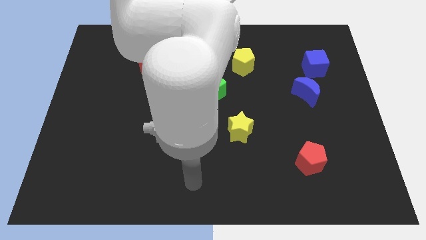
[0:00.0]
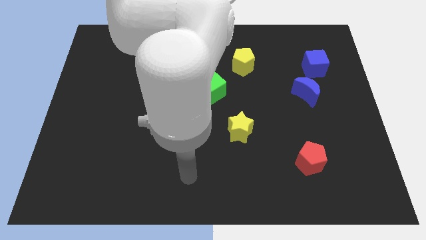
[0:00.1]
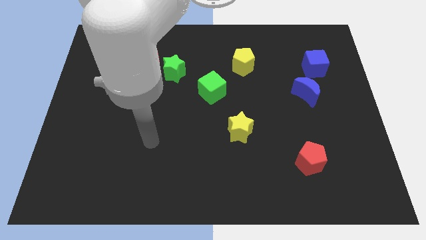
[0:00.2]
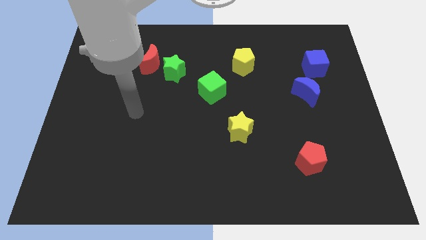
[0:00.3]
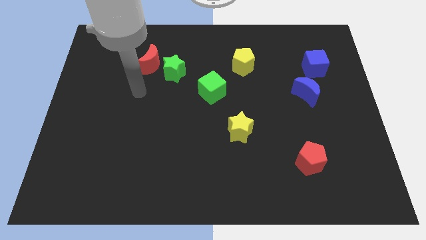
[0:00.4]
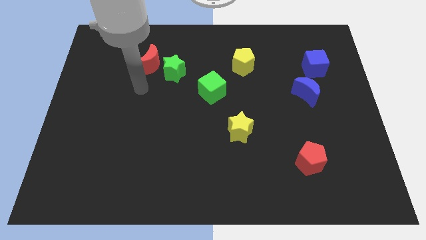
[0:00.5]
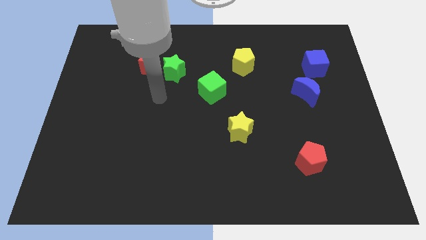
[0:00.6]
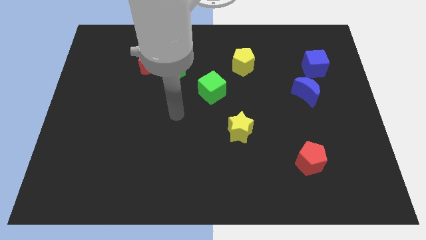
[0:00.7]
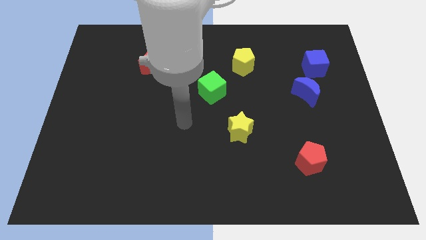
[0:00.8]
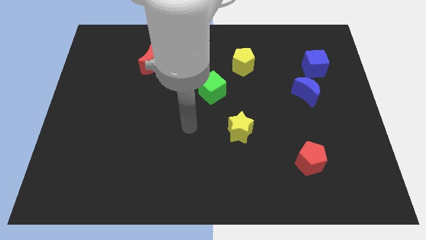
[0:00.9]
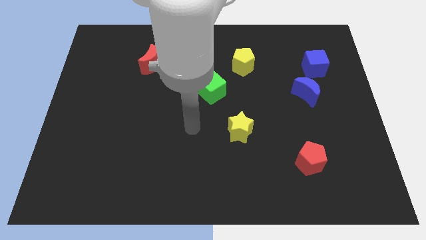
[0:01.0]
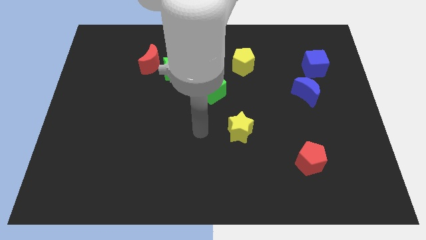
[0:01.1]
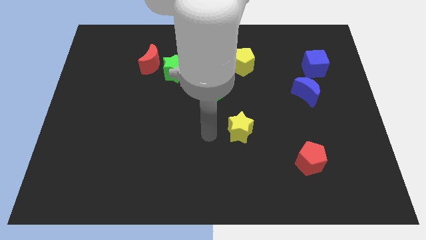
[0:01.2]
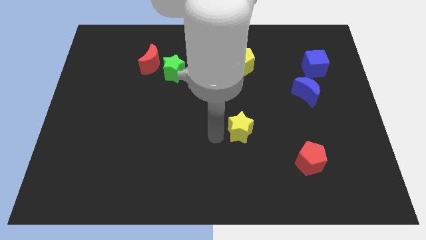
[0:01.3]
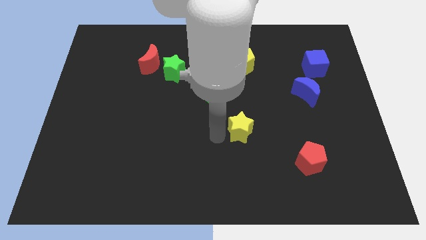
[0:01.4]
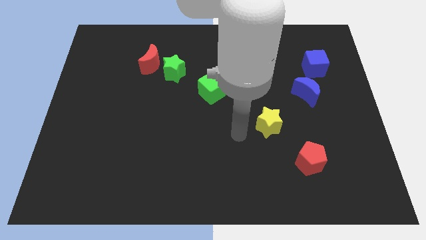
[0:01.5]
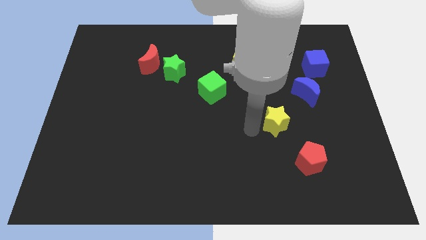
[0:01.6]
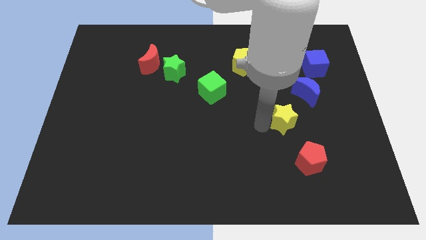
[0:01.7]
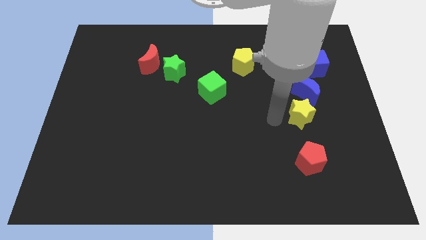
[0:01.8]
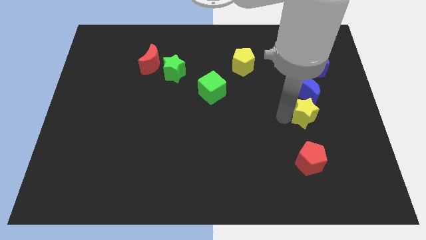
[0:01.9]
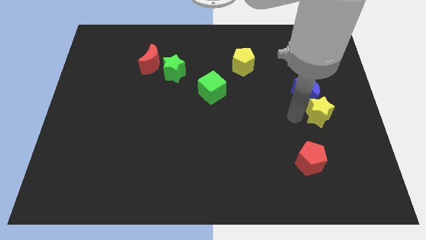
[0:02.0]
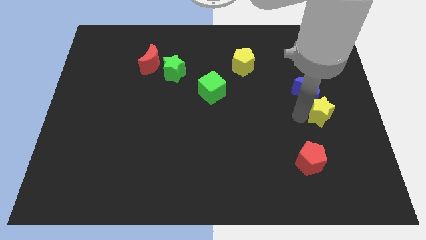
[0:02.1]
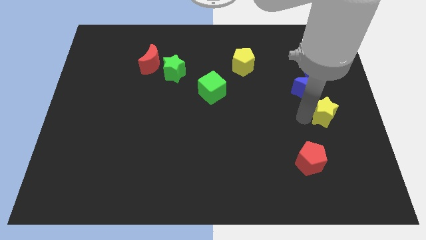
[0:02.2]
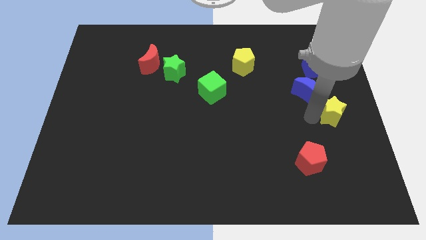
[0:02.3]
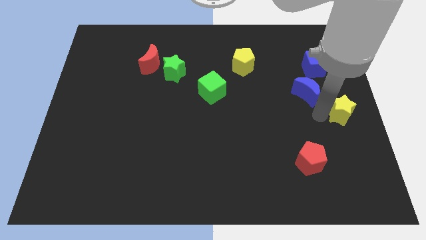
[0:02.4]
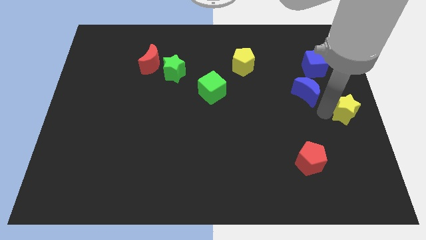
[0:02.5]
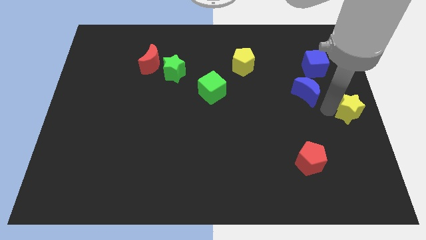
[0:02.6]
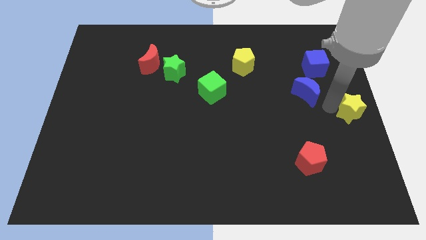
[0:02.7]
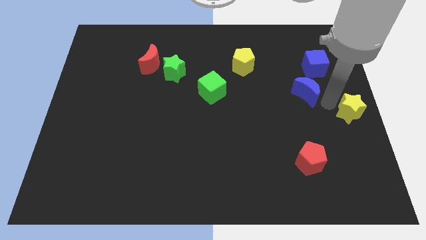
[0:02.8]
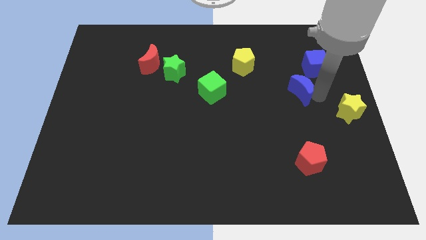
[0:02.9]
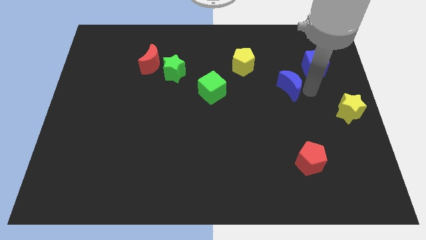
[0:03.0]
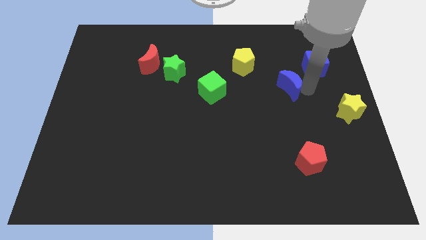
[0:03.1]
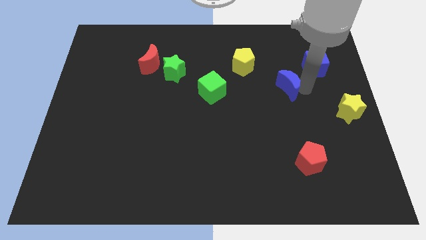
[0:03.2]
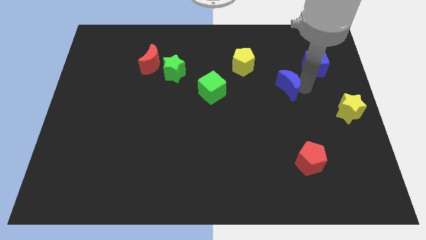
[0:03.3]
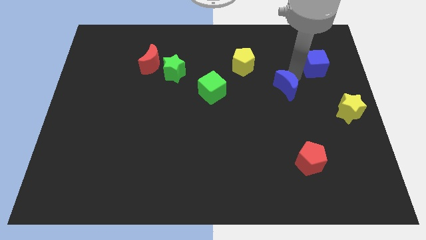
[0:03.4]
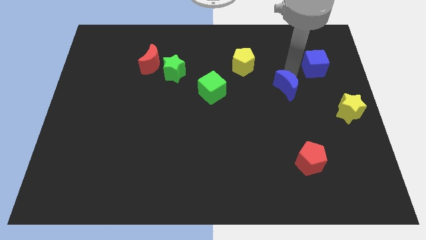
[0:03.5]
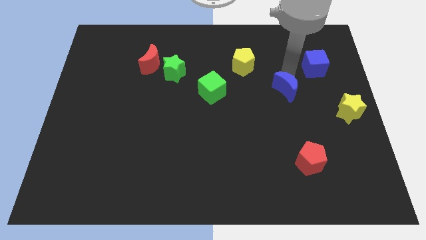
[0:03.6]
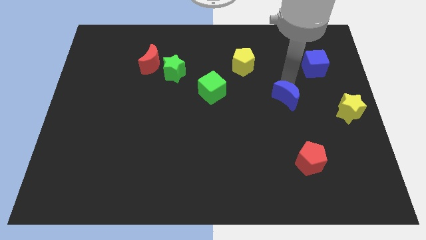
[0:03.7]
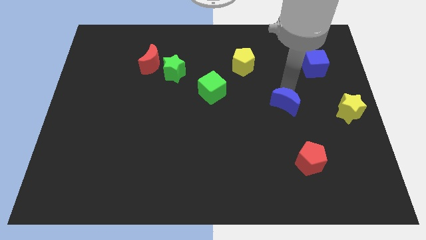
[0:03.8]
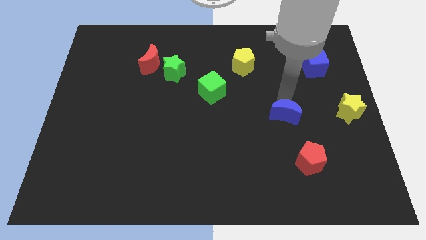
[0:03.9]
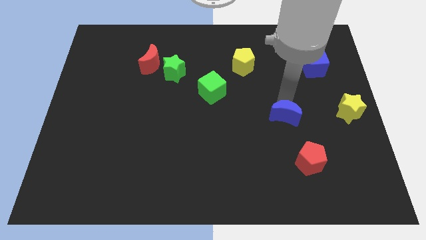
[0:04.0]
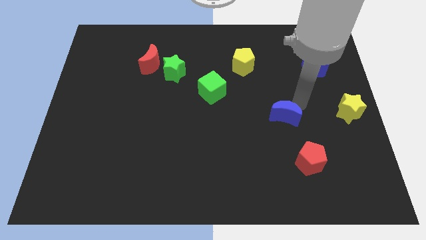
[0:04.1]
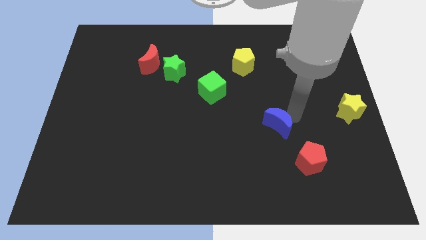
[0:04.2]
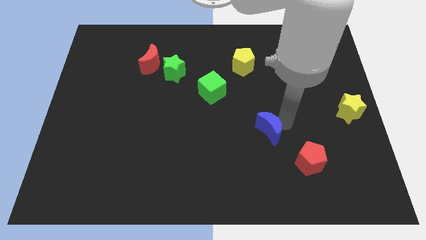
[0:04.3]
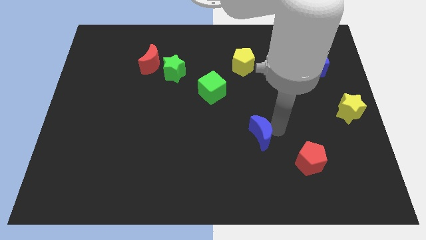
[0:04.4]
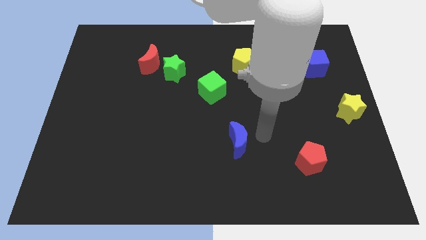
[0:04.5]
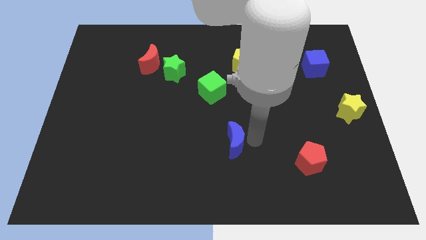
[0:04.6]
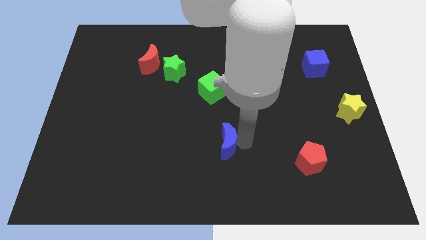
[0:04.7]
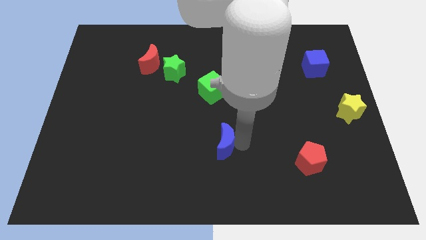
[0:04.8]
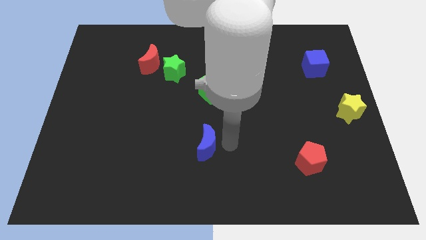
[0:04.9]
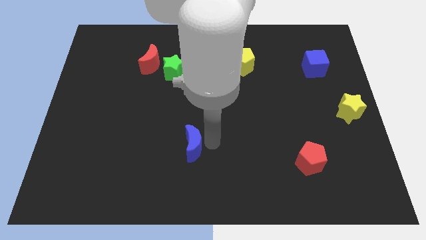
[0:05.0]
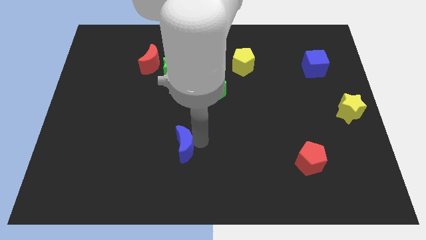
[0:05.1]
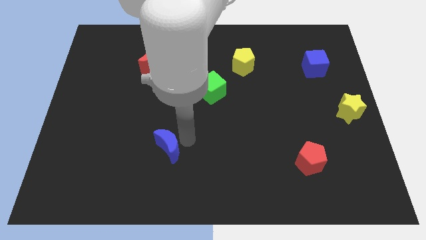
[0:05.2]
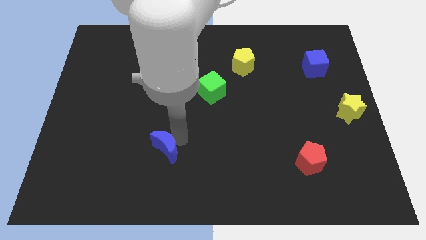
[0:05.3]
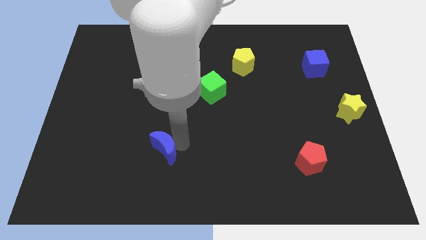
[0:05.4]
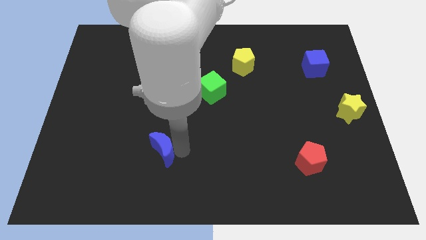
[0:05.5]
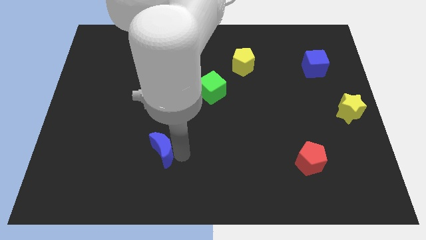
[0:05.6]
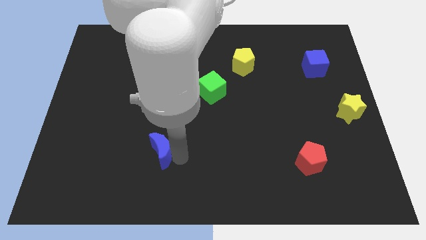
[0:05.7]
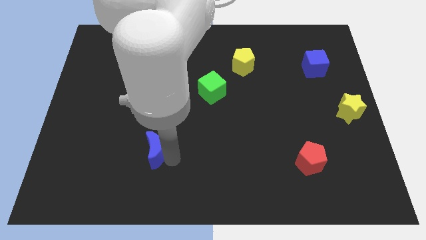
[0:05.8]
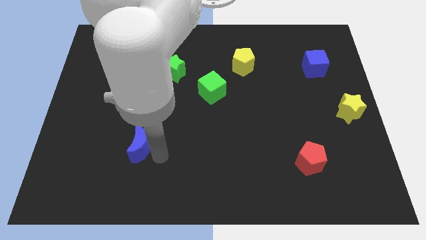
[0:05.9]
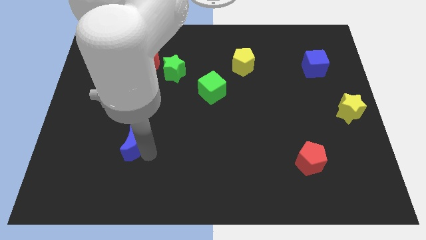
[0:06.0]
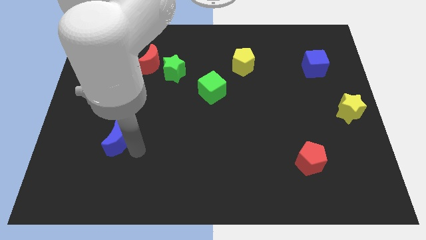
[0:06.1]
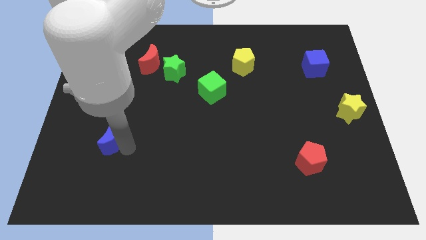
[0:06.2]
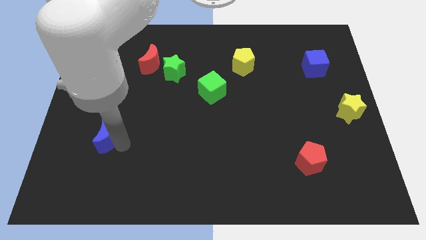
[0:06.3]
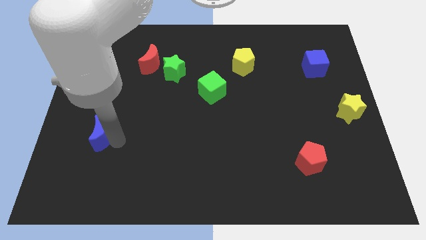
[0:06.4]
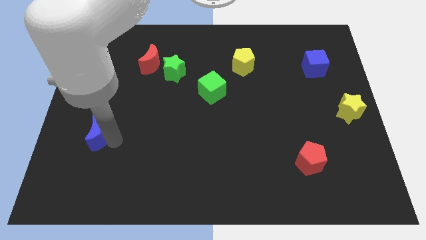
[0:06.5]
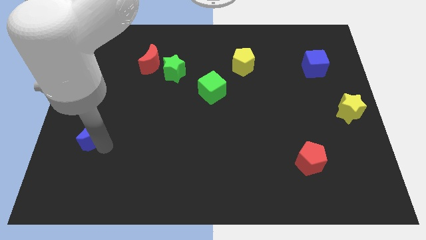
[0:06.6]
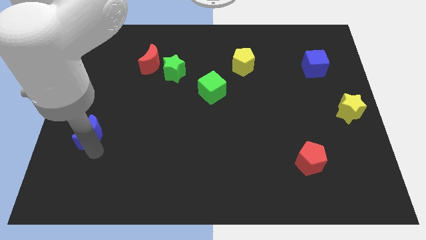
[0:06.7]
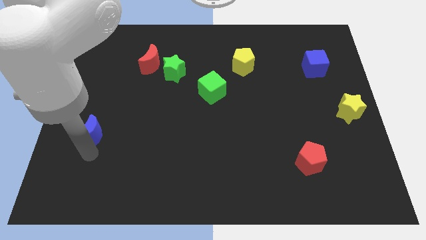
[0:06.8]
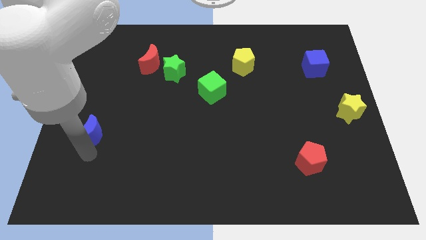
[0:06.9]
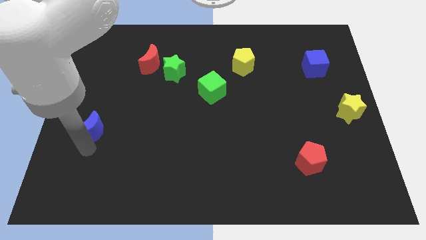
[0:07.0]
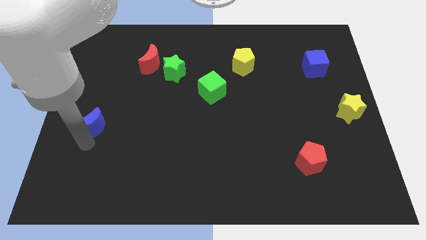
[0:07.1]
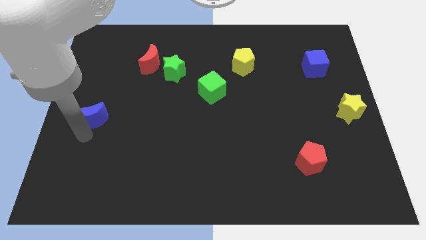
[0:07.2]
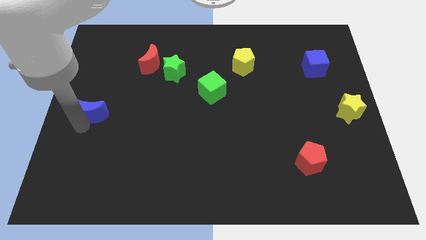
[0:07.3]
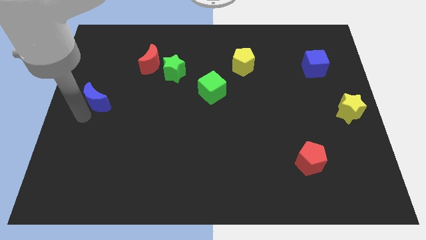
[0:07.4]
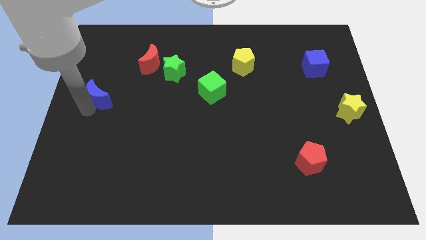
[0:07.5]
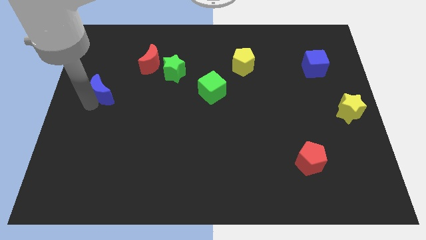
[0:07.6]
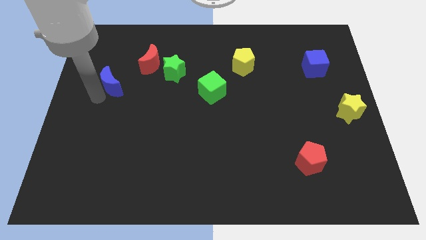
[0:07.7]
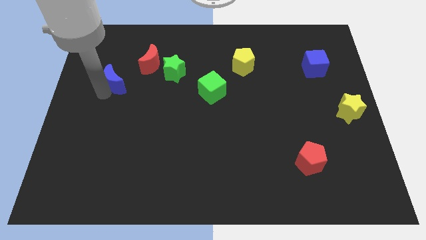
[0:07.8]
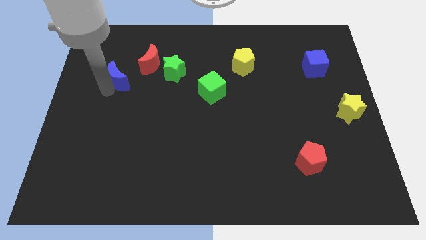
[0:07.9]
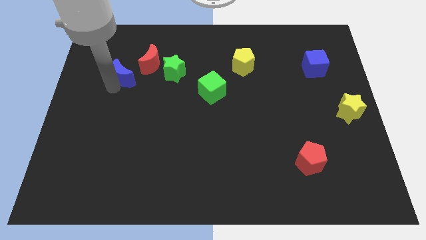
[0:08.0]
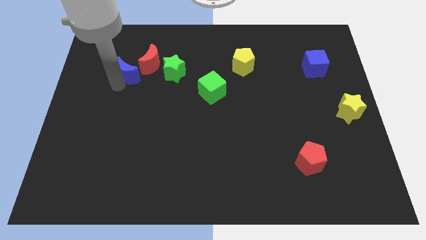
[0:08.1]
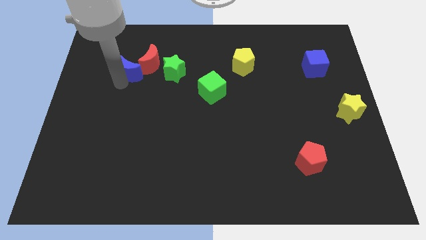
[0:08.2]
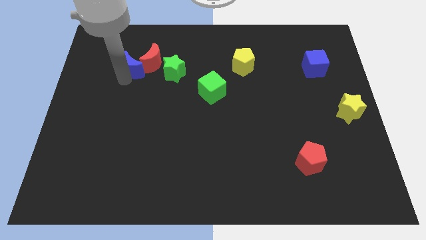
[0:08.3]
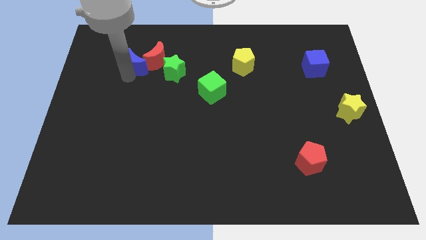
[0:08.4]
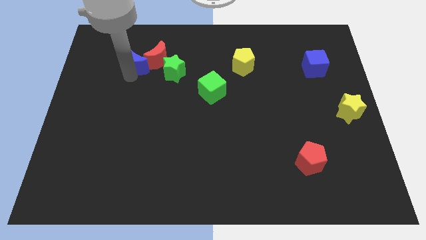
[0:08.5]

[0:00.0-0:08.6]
put the blue moon next to the red moon
